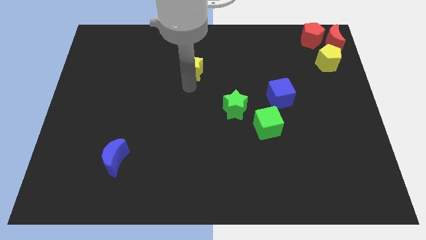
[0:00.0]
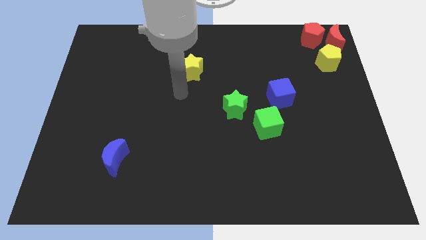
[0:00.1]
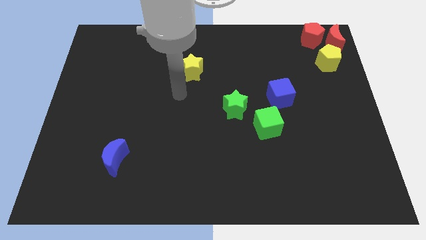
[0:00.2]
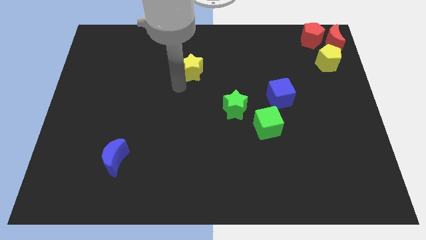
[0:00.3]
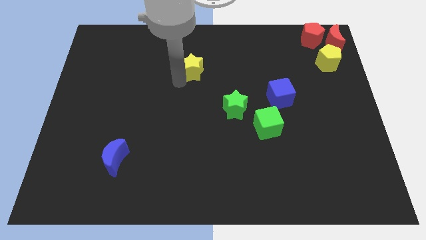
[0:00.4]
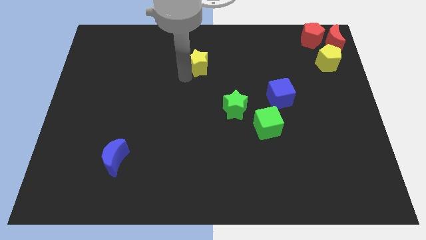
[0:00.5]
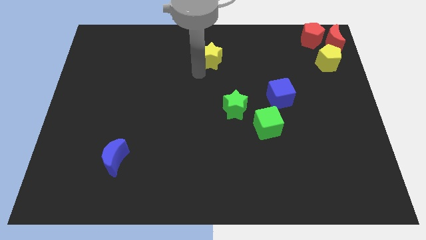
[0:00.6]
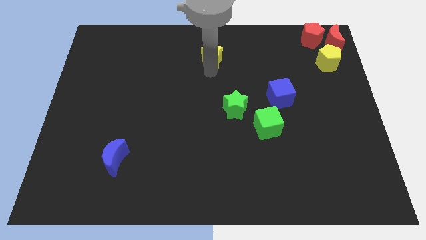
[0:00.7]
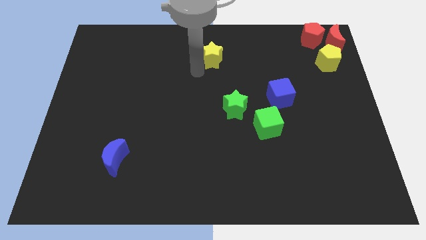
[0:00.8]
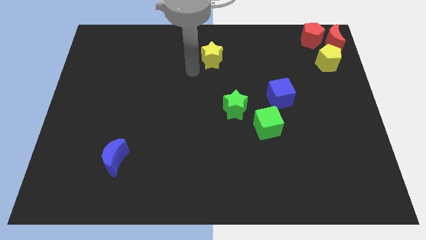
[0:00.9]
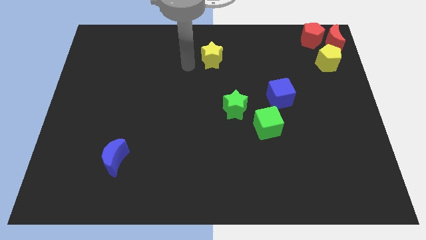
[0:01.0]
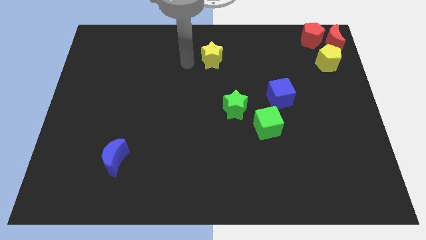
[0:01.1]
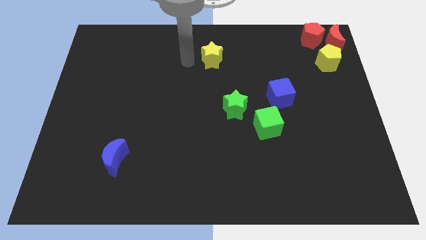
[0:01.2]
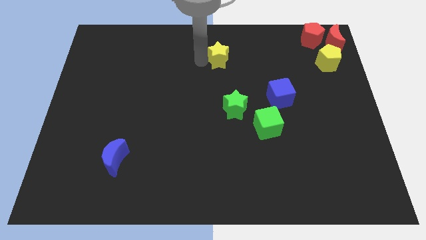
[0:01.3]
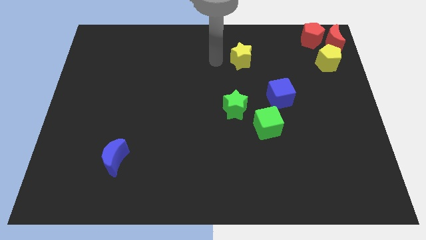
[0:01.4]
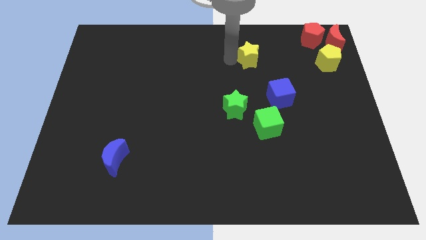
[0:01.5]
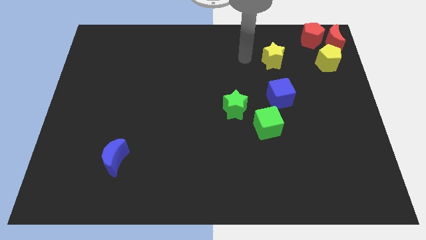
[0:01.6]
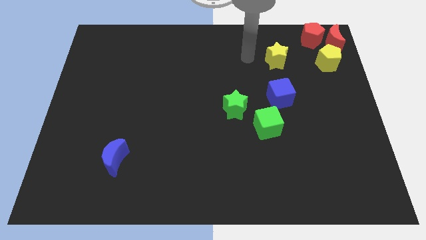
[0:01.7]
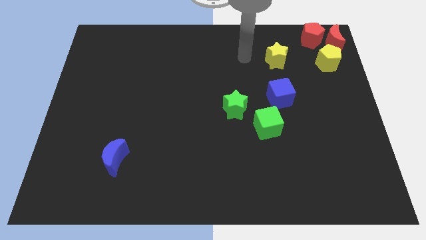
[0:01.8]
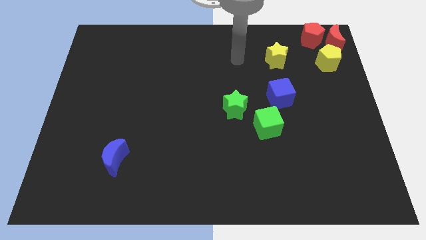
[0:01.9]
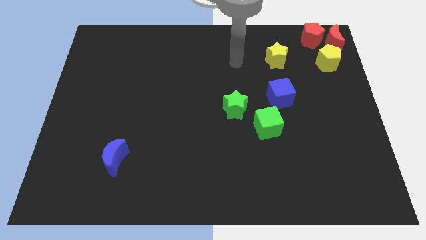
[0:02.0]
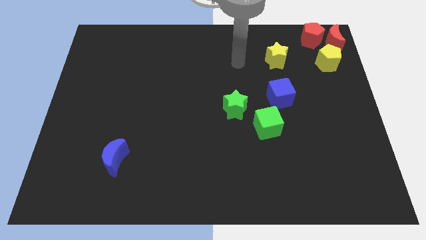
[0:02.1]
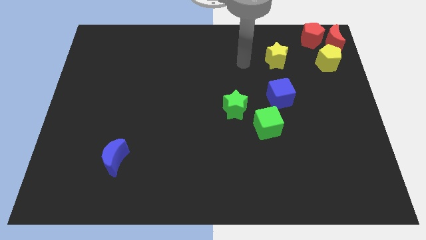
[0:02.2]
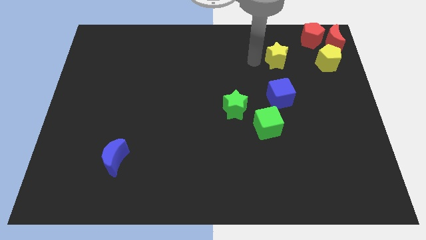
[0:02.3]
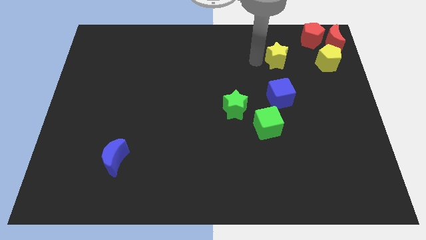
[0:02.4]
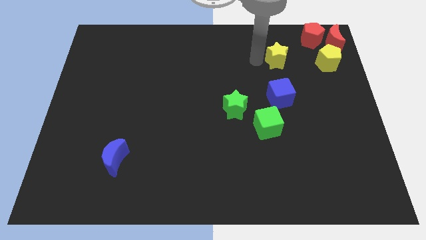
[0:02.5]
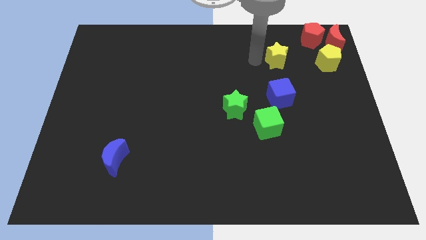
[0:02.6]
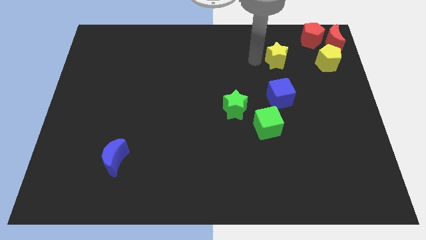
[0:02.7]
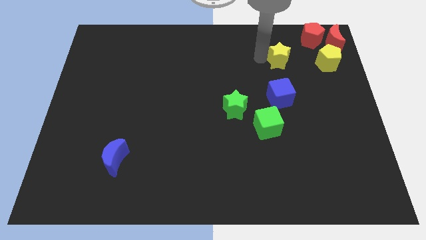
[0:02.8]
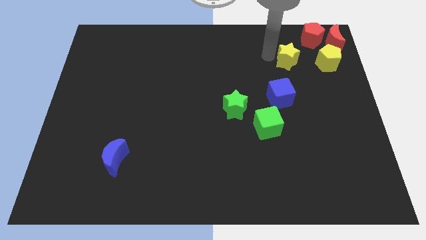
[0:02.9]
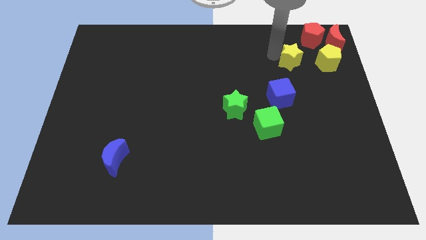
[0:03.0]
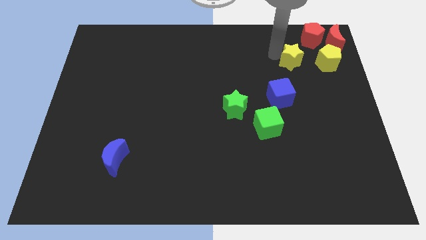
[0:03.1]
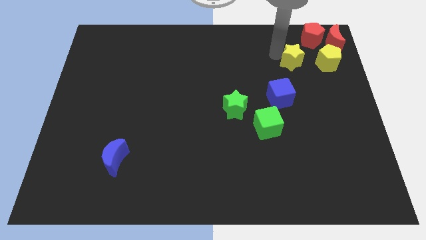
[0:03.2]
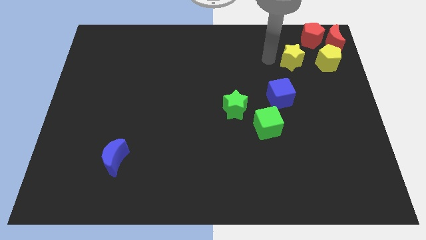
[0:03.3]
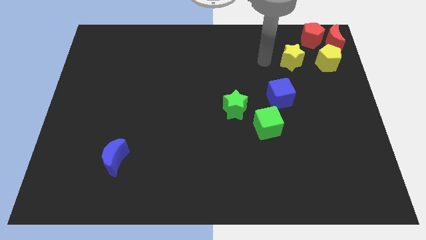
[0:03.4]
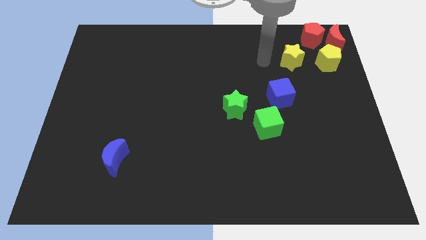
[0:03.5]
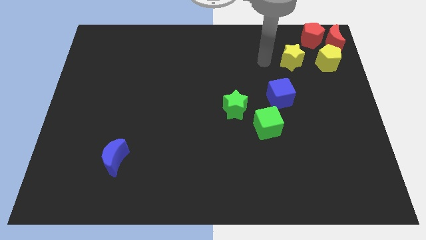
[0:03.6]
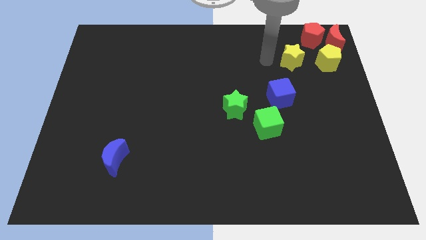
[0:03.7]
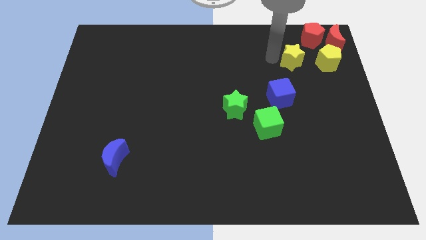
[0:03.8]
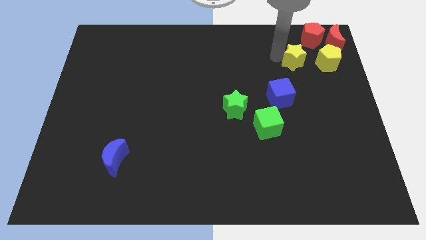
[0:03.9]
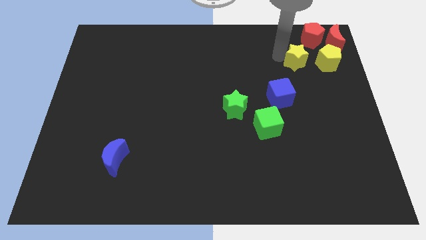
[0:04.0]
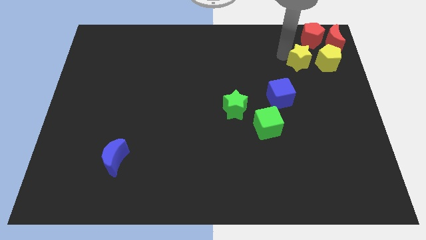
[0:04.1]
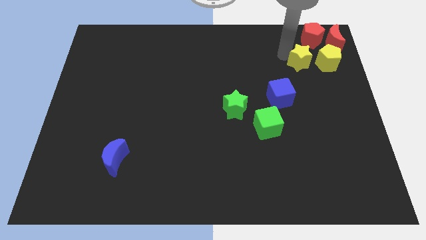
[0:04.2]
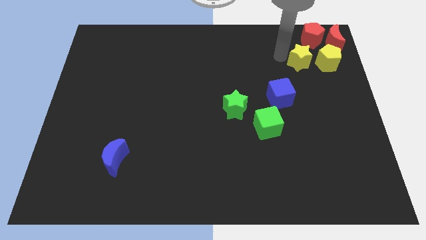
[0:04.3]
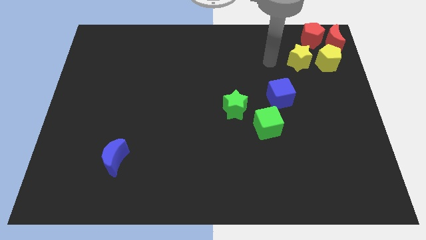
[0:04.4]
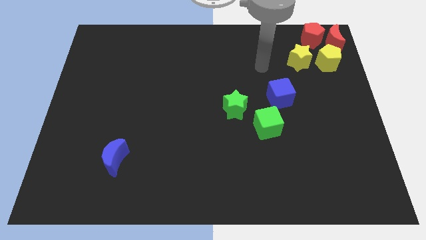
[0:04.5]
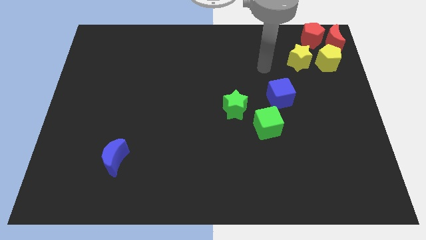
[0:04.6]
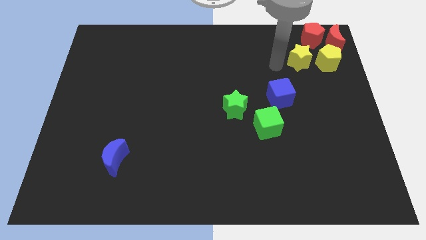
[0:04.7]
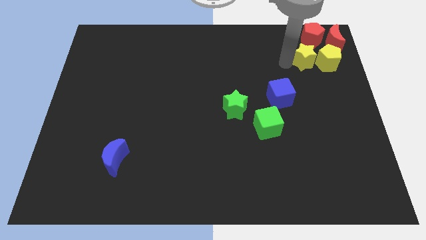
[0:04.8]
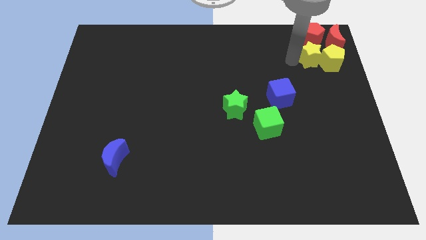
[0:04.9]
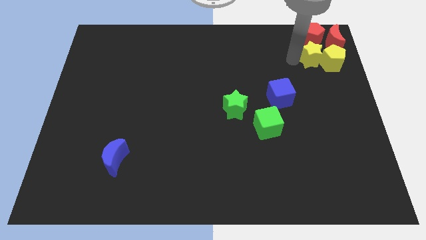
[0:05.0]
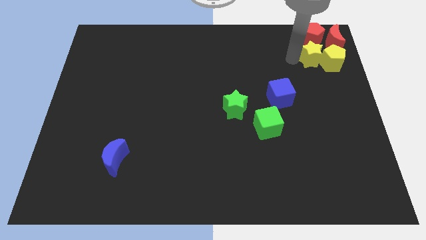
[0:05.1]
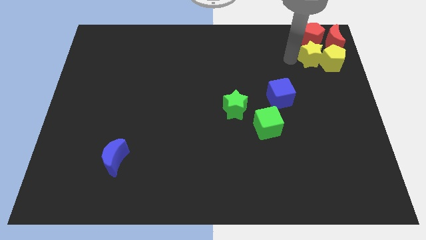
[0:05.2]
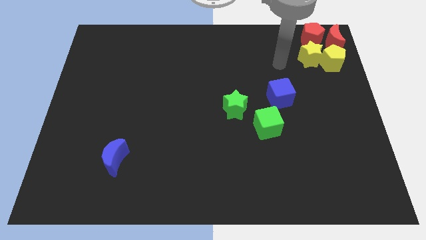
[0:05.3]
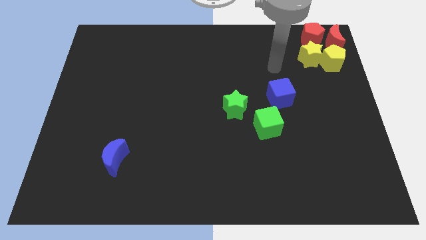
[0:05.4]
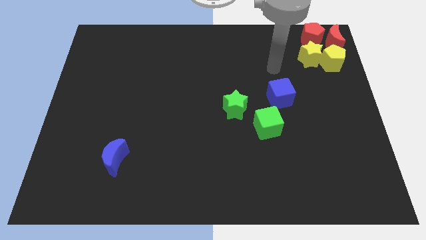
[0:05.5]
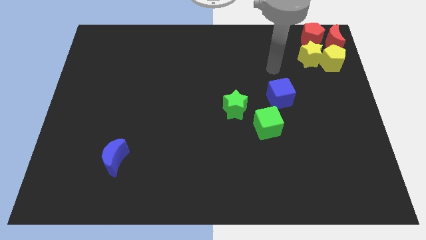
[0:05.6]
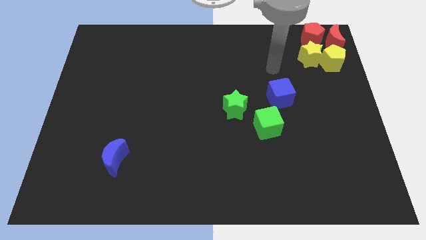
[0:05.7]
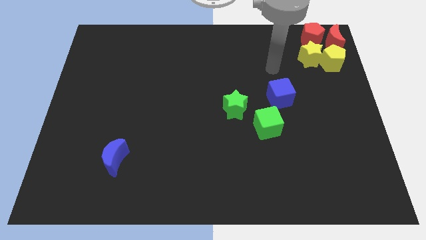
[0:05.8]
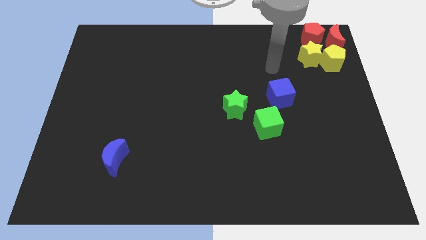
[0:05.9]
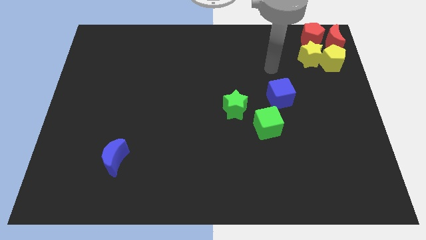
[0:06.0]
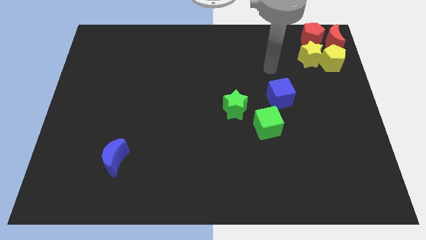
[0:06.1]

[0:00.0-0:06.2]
push the yellow star into the yellow pentagon

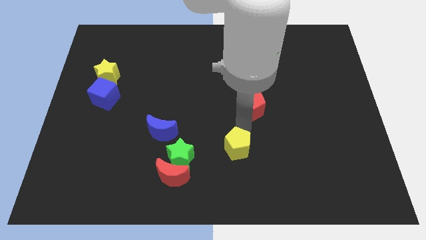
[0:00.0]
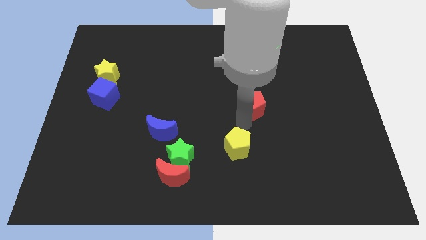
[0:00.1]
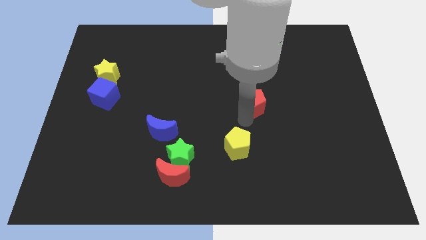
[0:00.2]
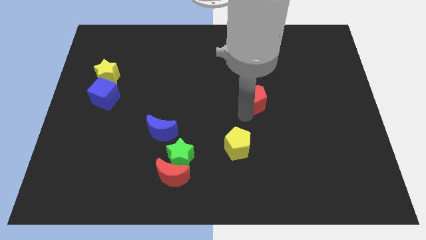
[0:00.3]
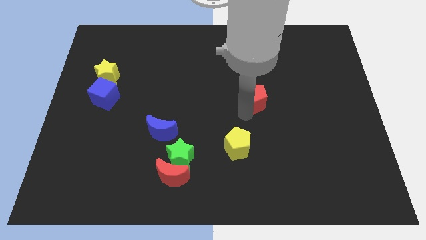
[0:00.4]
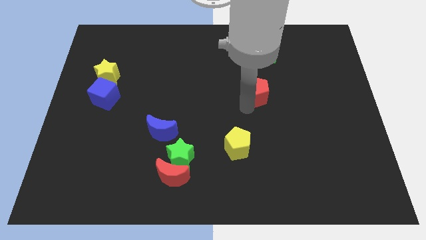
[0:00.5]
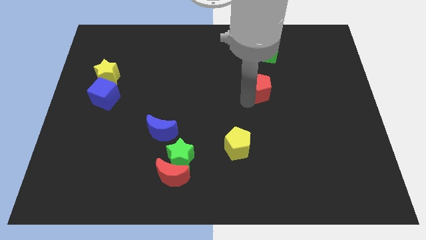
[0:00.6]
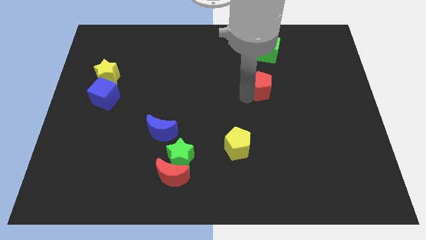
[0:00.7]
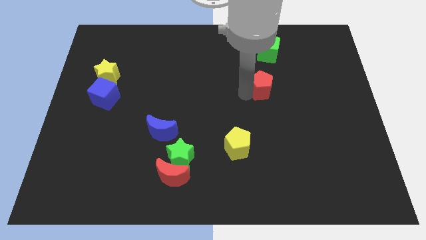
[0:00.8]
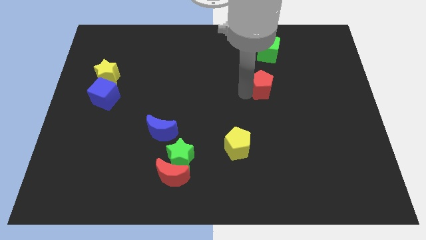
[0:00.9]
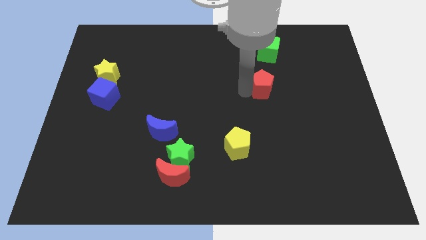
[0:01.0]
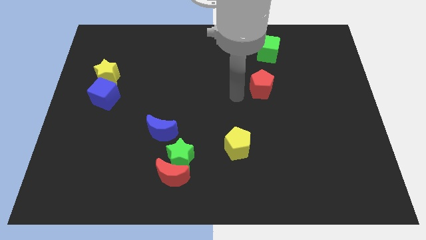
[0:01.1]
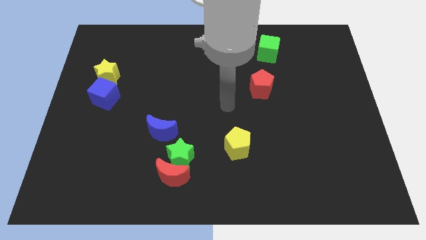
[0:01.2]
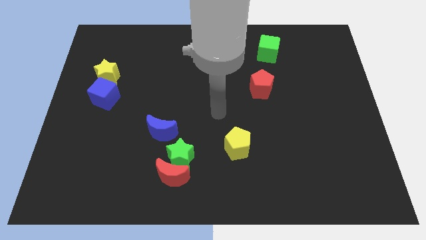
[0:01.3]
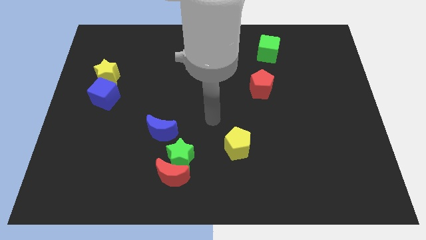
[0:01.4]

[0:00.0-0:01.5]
push the red pentagon to the bottom side of the green cube

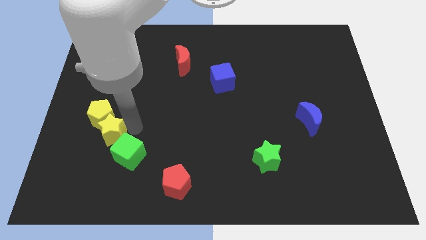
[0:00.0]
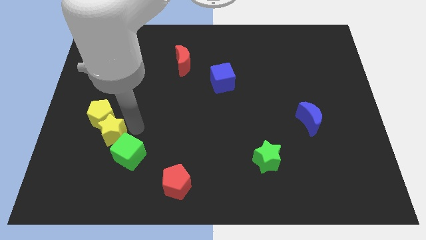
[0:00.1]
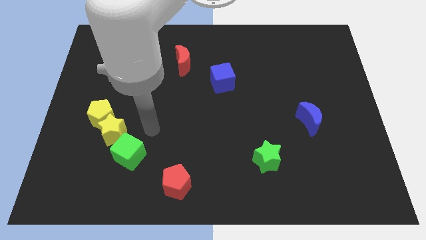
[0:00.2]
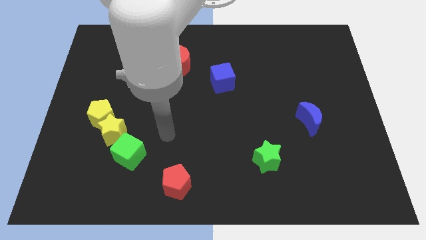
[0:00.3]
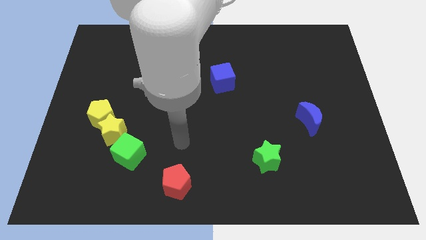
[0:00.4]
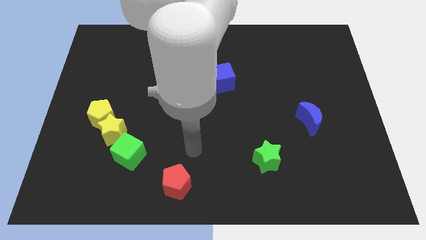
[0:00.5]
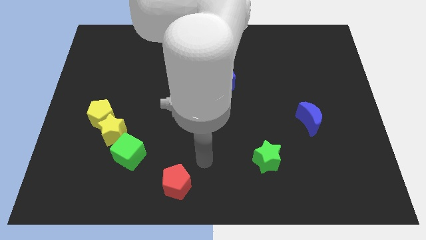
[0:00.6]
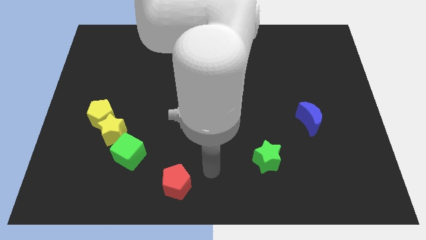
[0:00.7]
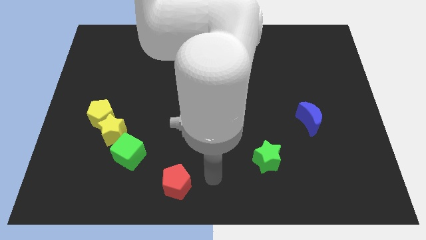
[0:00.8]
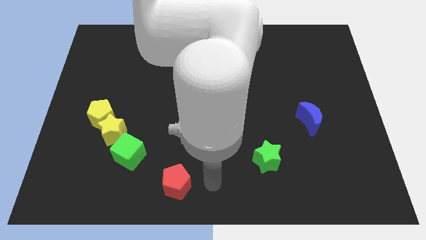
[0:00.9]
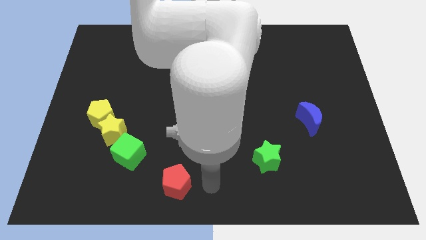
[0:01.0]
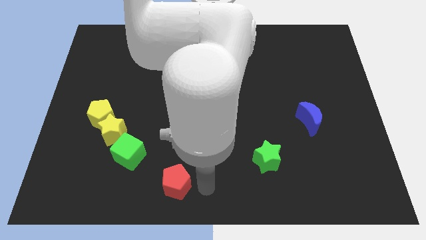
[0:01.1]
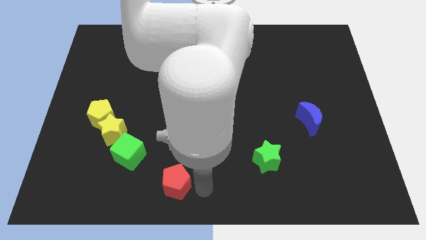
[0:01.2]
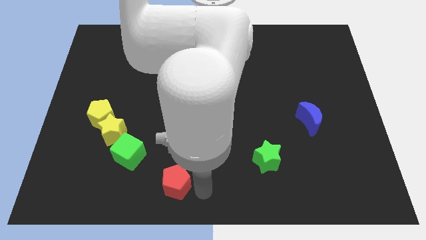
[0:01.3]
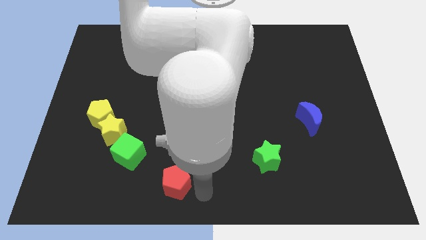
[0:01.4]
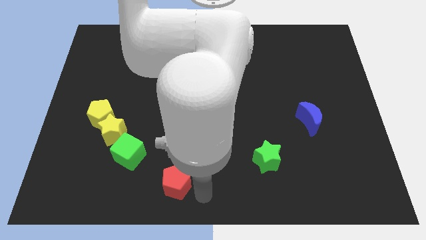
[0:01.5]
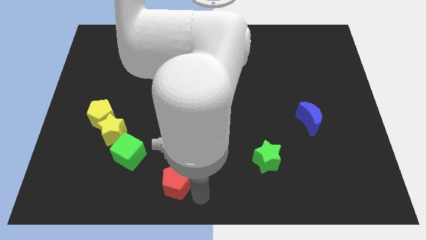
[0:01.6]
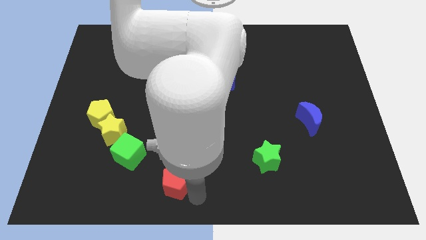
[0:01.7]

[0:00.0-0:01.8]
move the arm towards the red pentagon
